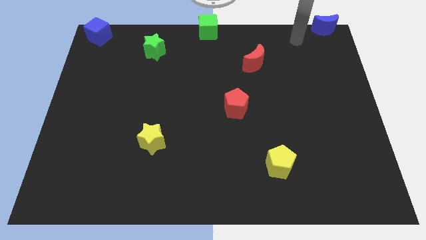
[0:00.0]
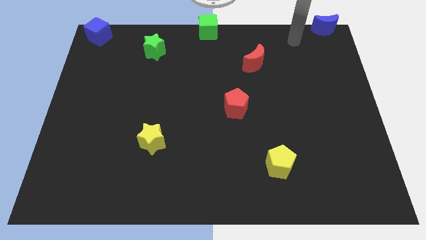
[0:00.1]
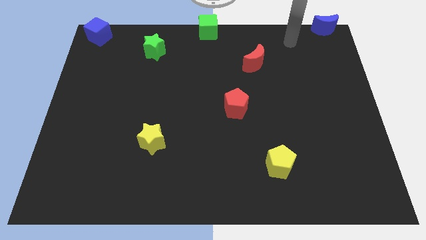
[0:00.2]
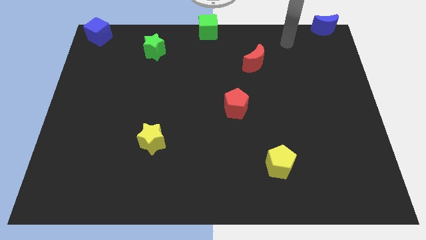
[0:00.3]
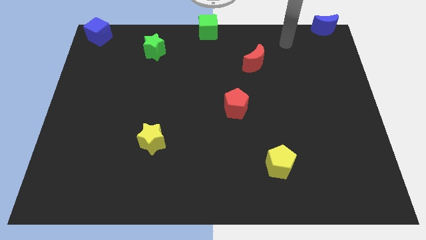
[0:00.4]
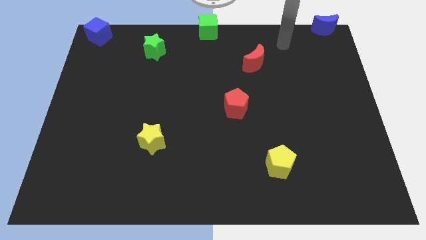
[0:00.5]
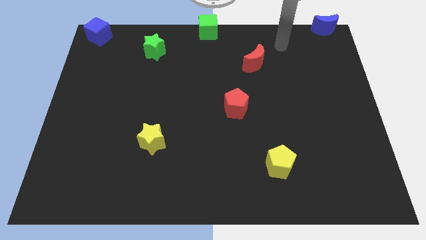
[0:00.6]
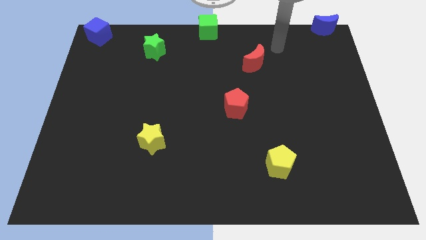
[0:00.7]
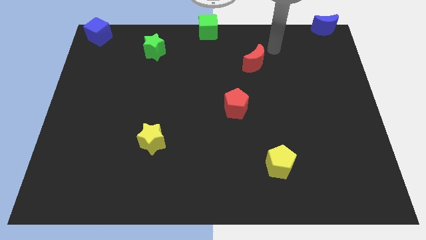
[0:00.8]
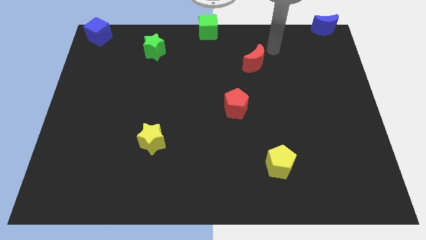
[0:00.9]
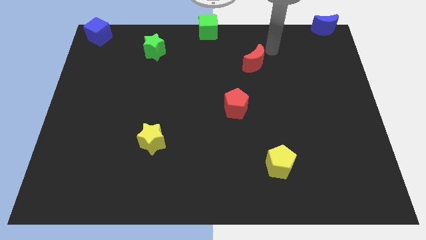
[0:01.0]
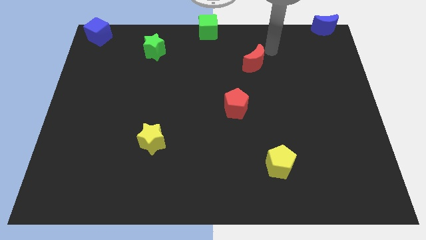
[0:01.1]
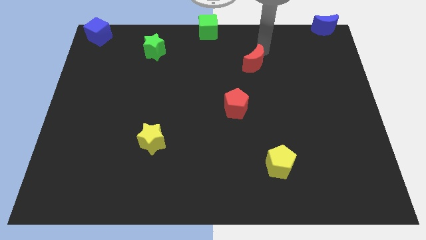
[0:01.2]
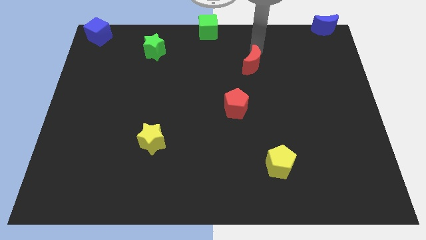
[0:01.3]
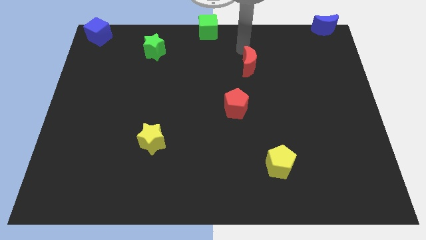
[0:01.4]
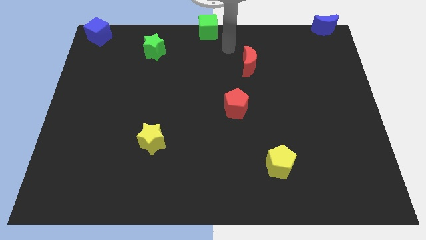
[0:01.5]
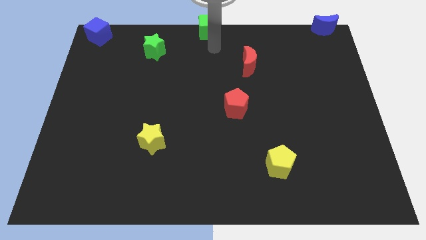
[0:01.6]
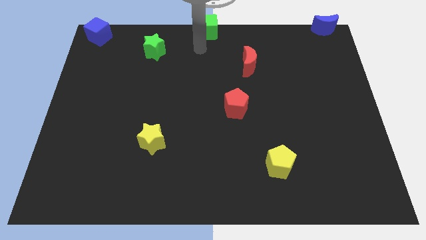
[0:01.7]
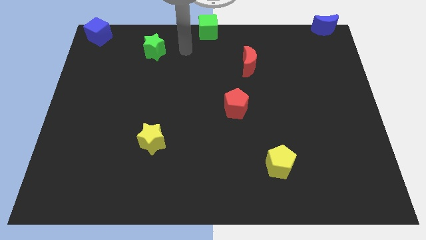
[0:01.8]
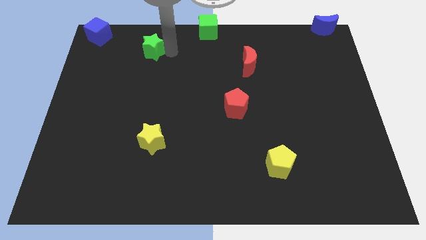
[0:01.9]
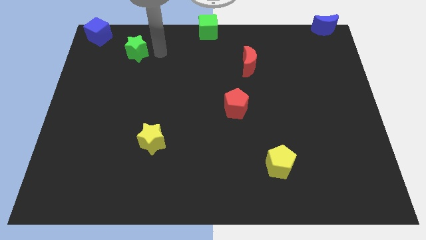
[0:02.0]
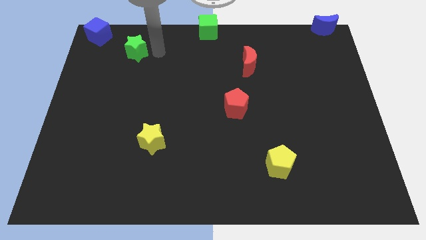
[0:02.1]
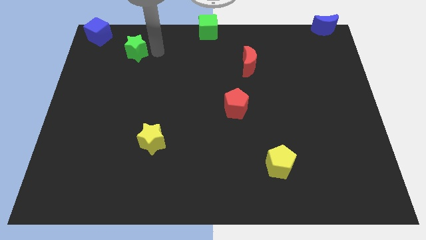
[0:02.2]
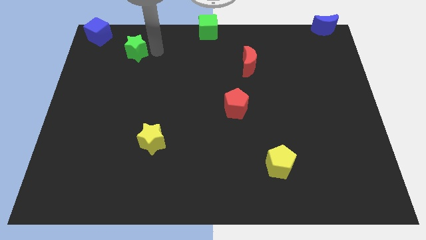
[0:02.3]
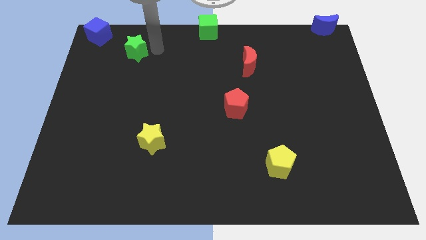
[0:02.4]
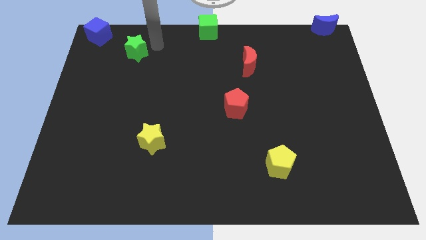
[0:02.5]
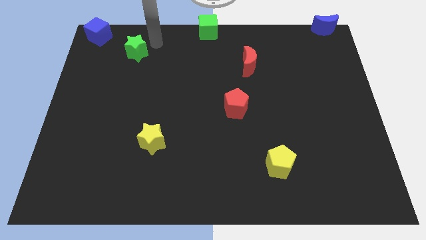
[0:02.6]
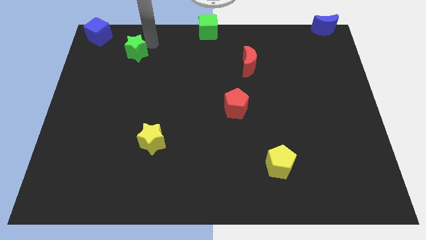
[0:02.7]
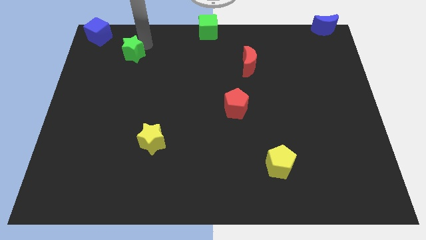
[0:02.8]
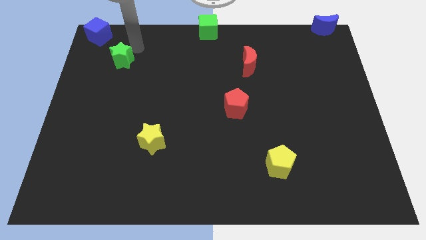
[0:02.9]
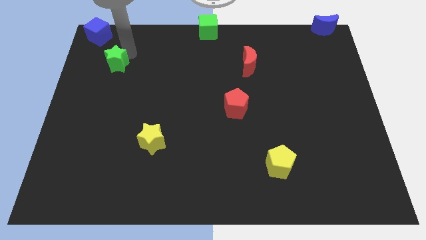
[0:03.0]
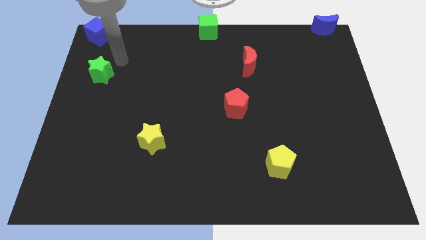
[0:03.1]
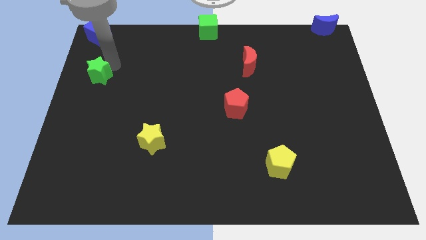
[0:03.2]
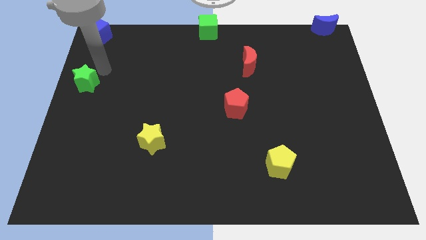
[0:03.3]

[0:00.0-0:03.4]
place the green star below the blue cube

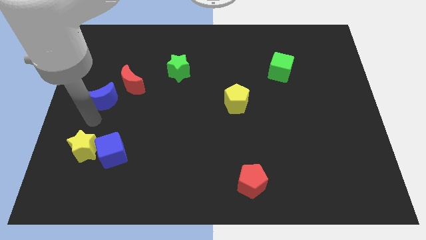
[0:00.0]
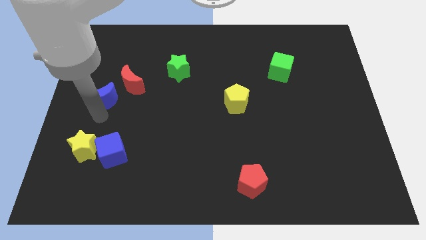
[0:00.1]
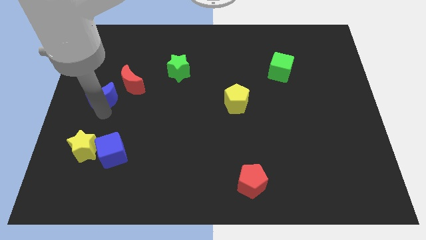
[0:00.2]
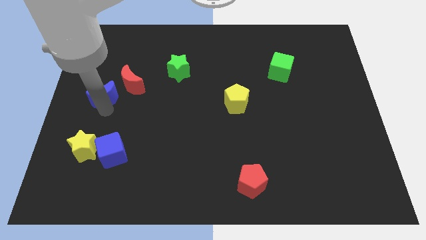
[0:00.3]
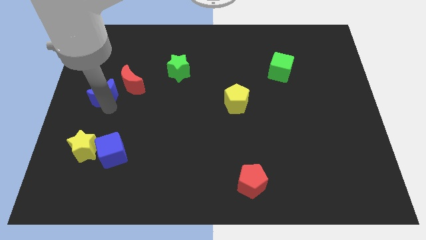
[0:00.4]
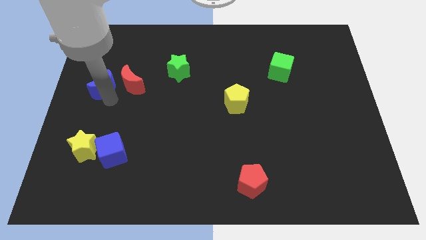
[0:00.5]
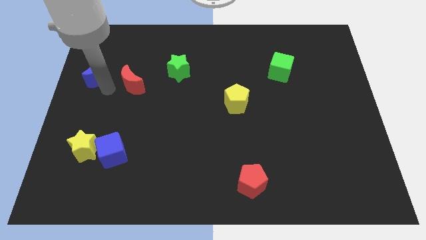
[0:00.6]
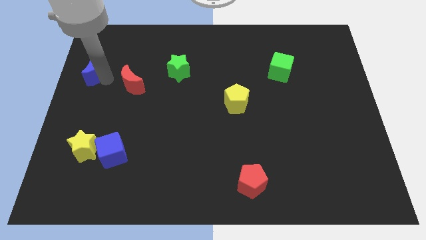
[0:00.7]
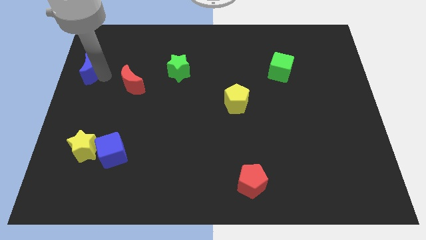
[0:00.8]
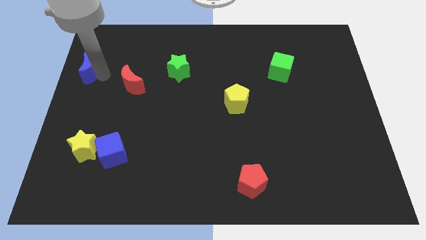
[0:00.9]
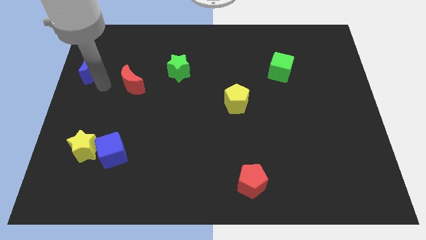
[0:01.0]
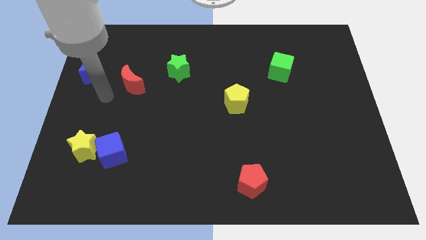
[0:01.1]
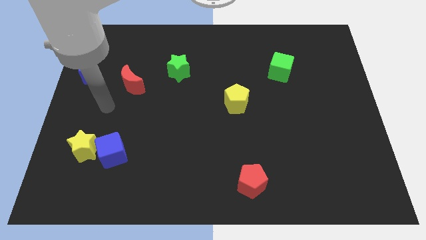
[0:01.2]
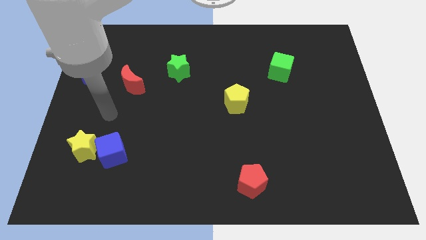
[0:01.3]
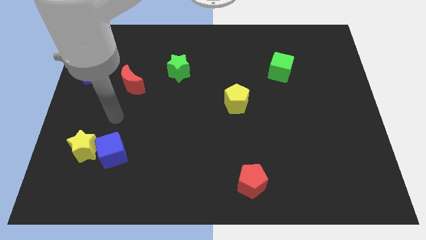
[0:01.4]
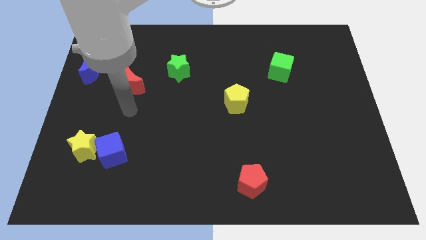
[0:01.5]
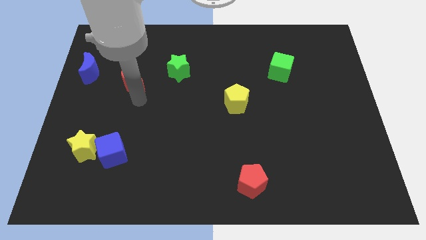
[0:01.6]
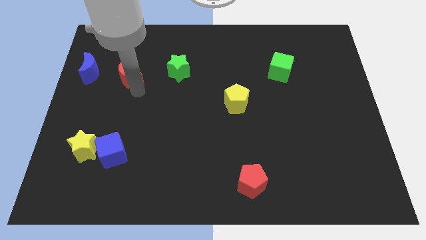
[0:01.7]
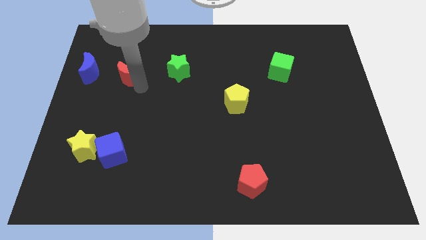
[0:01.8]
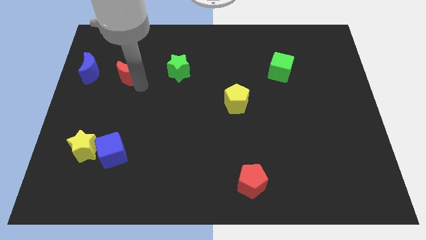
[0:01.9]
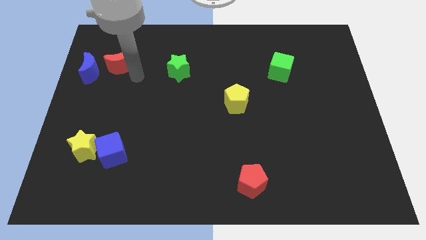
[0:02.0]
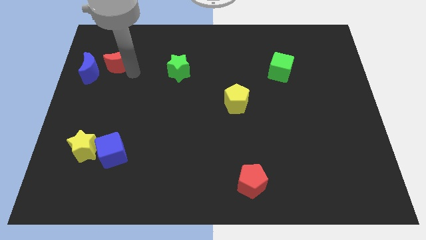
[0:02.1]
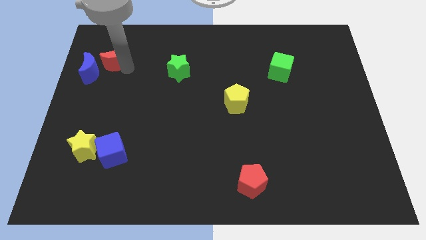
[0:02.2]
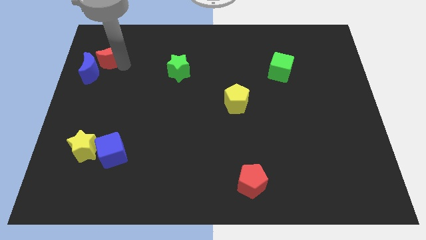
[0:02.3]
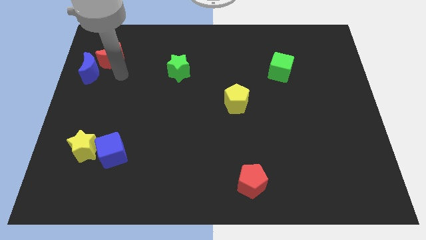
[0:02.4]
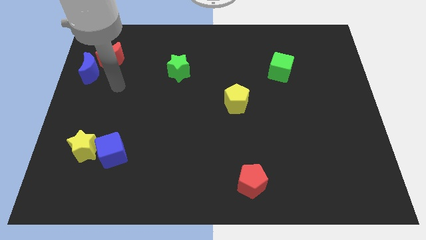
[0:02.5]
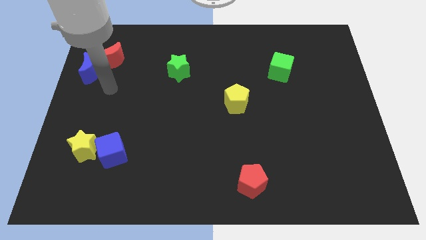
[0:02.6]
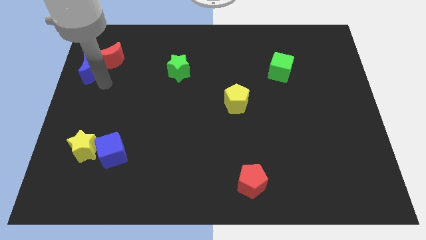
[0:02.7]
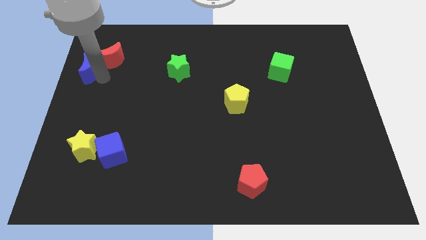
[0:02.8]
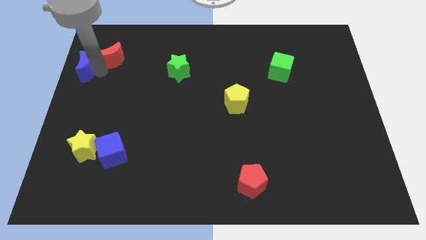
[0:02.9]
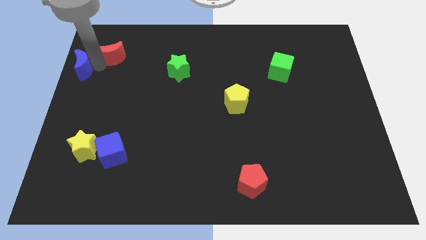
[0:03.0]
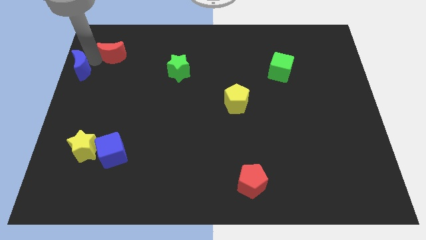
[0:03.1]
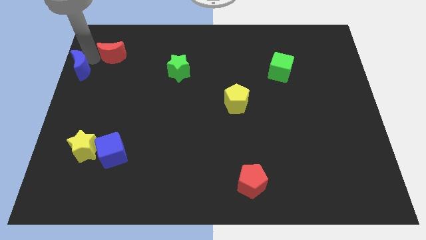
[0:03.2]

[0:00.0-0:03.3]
slide blue moon and the red moon towards top left corner

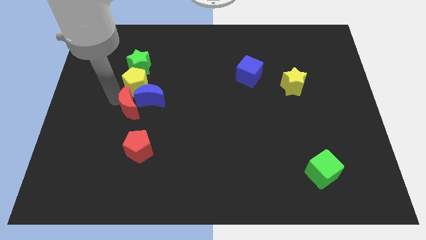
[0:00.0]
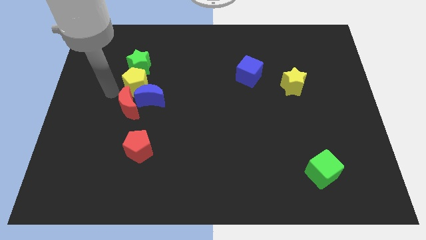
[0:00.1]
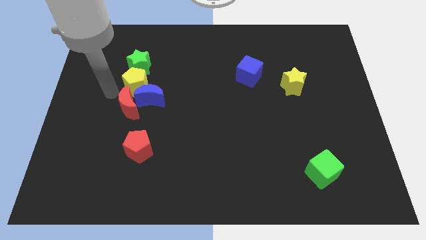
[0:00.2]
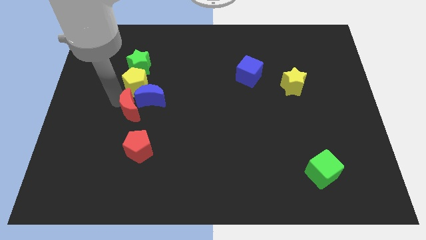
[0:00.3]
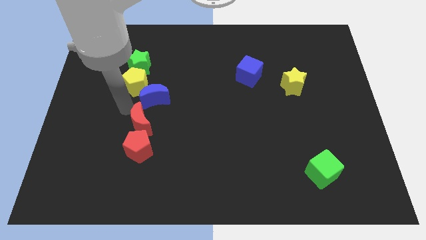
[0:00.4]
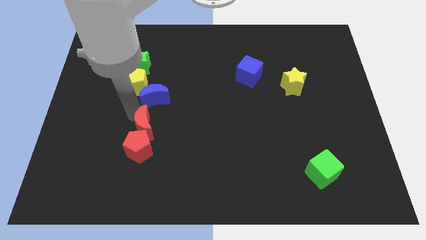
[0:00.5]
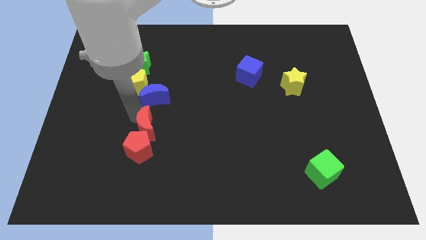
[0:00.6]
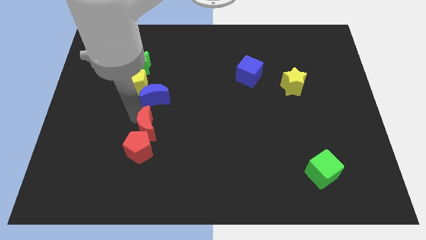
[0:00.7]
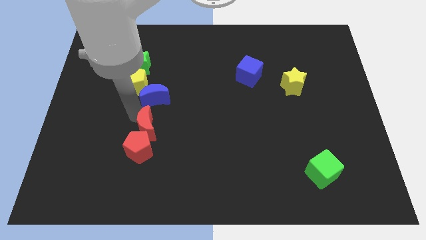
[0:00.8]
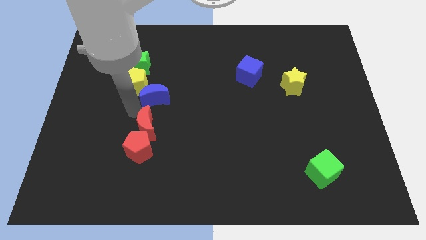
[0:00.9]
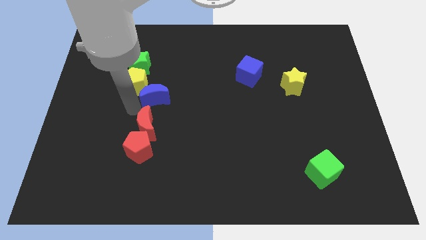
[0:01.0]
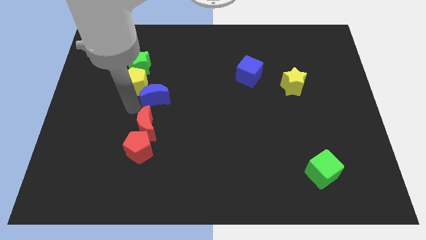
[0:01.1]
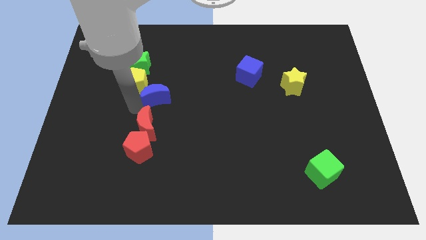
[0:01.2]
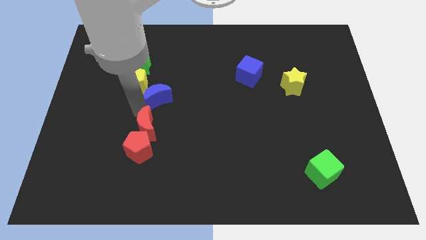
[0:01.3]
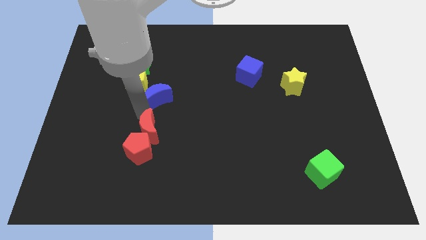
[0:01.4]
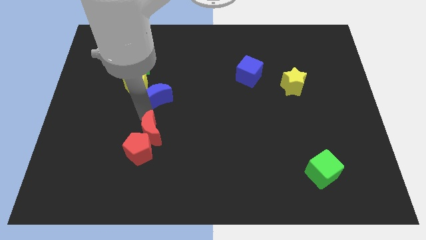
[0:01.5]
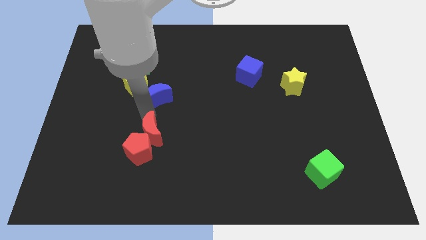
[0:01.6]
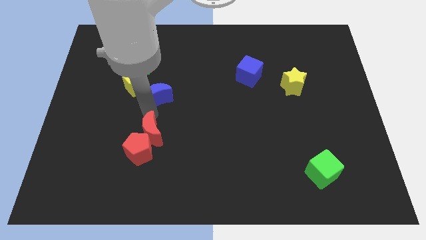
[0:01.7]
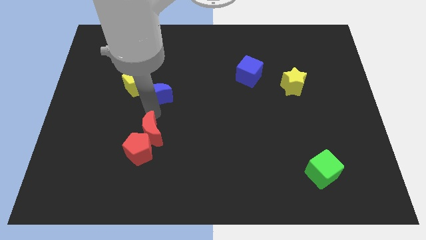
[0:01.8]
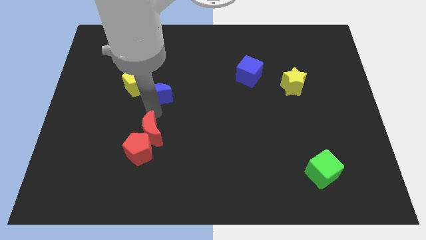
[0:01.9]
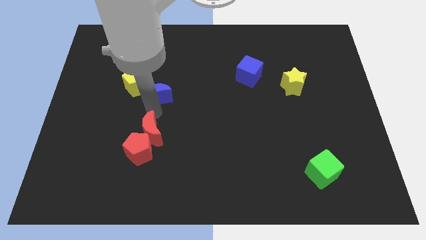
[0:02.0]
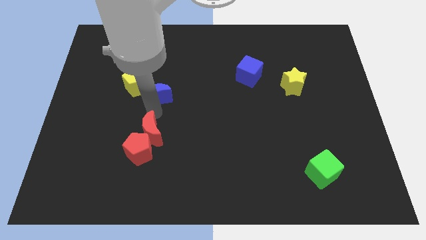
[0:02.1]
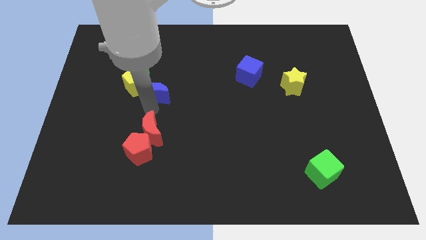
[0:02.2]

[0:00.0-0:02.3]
place the red crescent to the top right of red pentagon
